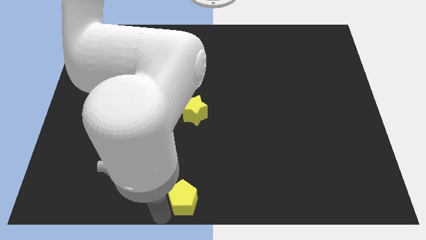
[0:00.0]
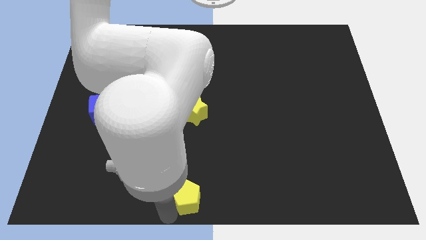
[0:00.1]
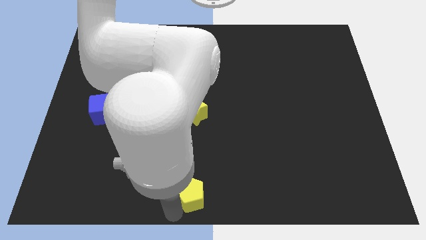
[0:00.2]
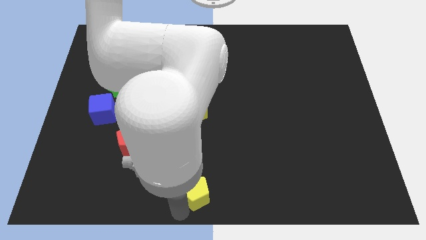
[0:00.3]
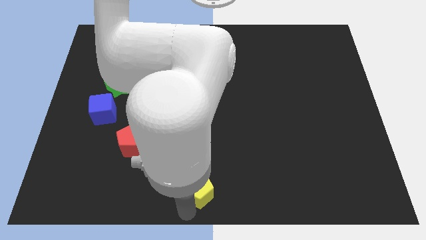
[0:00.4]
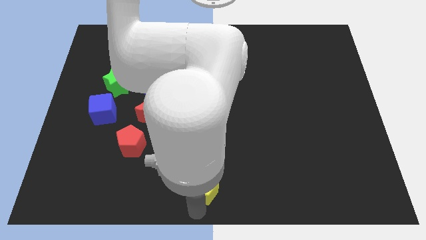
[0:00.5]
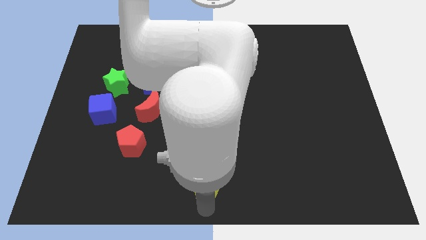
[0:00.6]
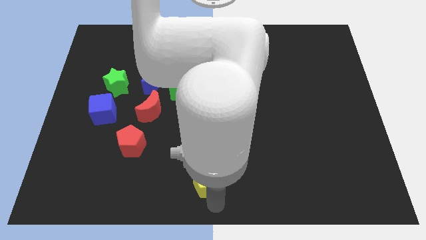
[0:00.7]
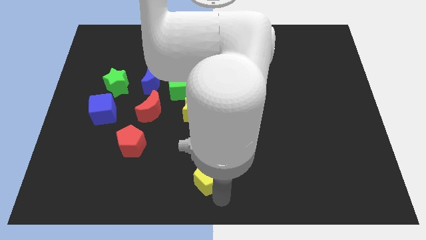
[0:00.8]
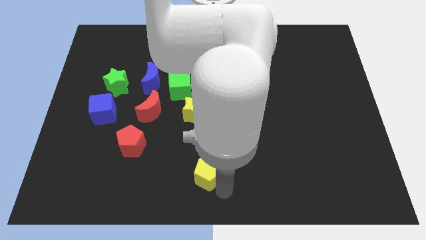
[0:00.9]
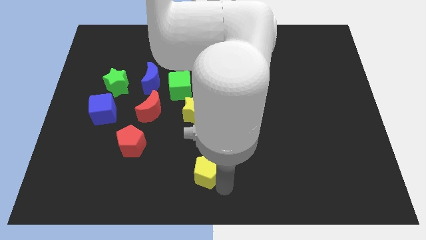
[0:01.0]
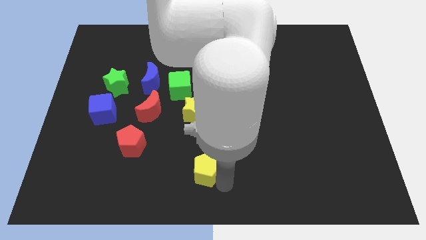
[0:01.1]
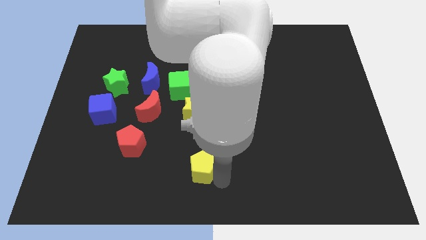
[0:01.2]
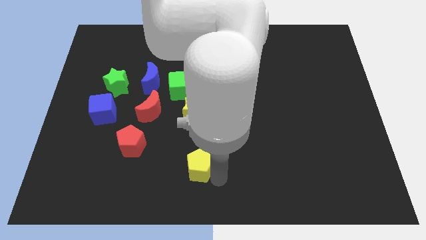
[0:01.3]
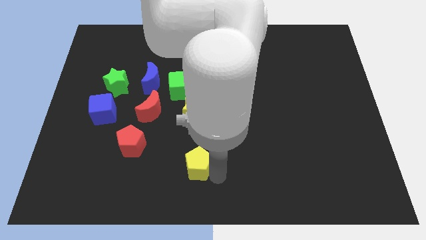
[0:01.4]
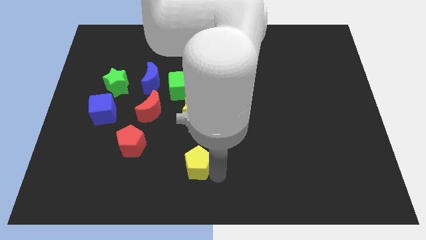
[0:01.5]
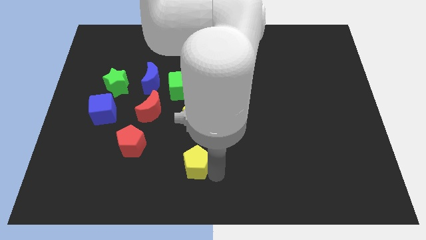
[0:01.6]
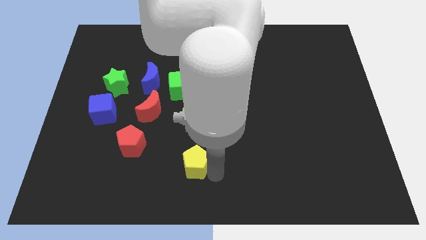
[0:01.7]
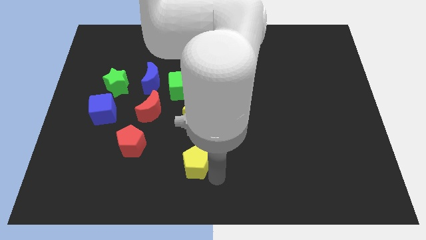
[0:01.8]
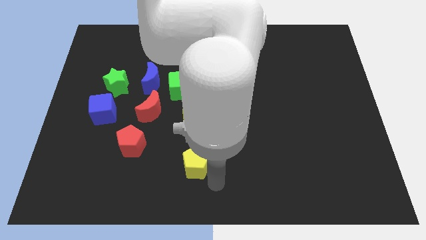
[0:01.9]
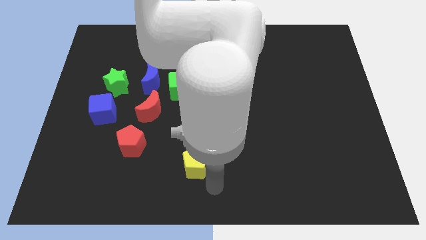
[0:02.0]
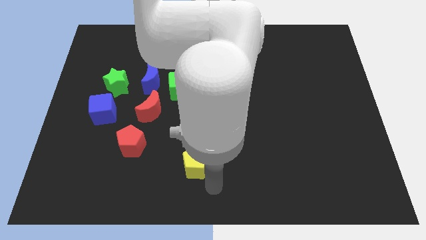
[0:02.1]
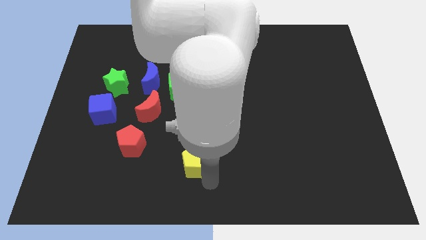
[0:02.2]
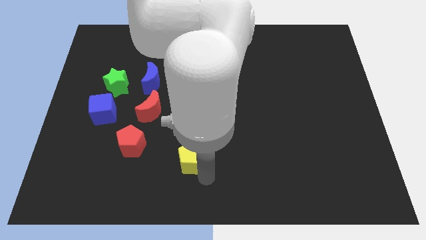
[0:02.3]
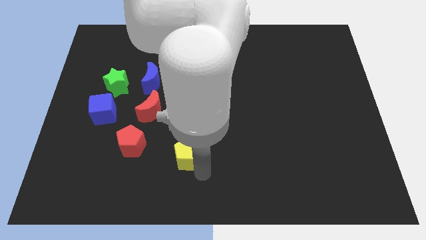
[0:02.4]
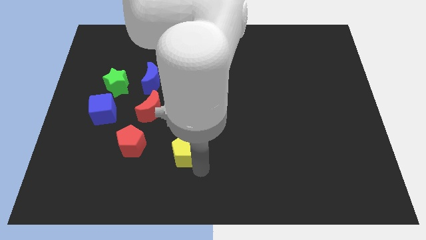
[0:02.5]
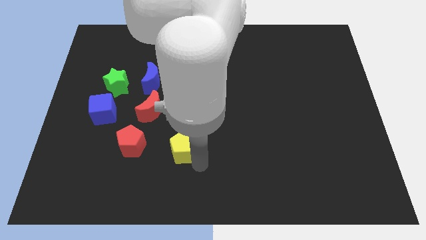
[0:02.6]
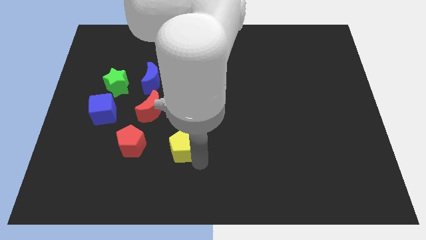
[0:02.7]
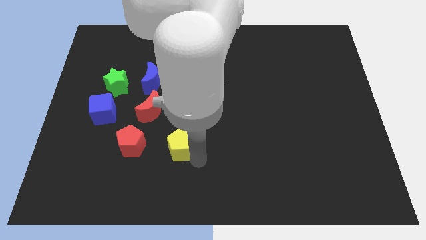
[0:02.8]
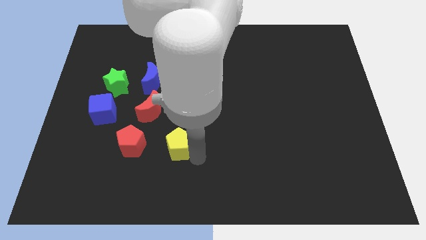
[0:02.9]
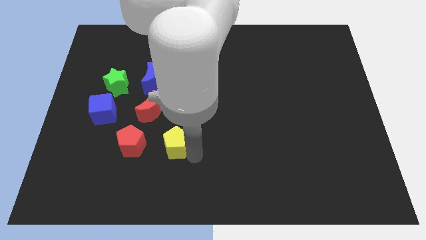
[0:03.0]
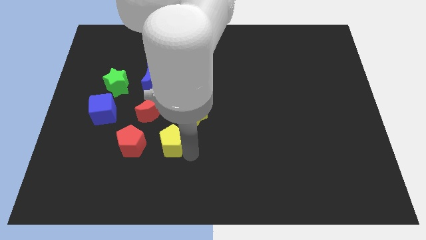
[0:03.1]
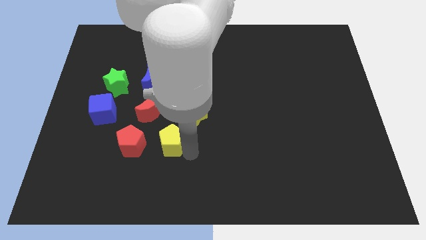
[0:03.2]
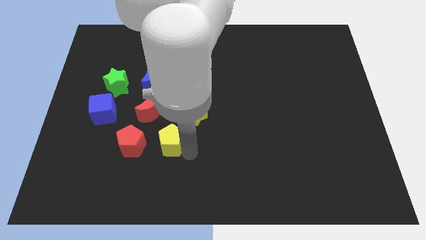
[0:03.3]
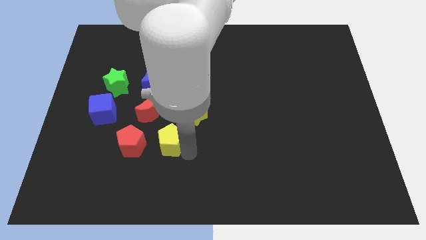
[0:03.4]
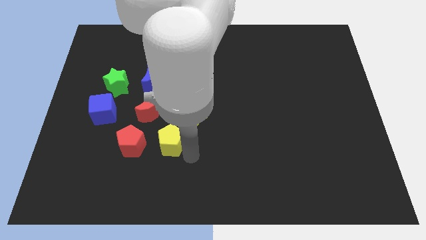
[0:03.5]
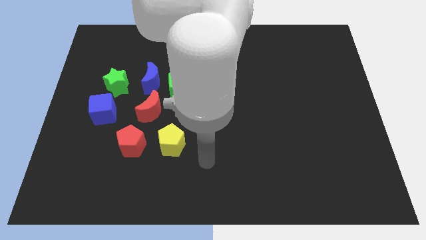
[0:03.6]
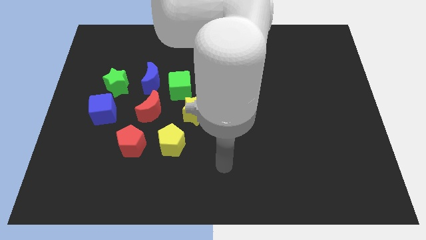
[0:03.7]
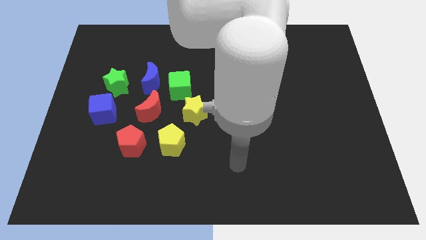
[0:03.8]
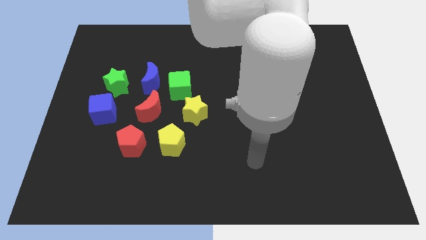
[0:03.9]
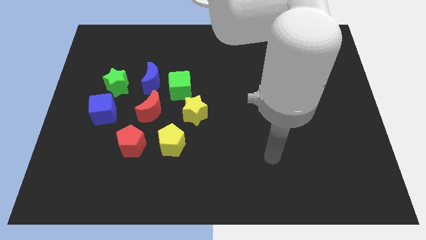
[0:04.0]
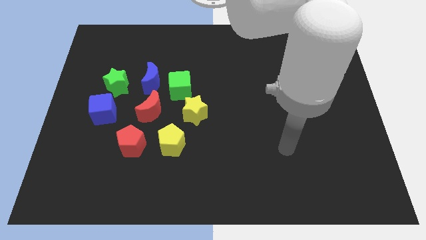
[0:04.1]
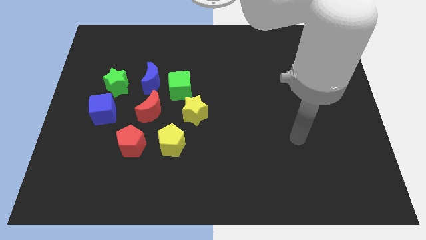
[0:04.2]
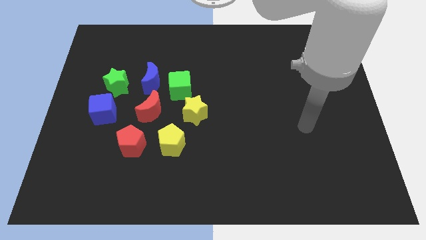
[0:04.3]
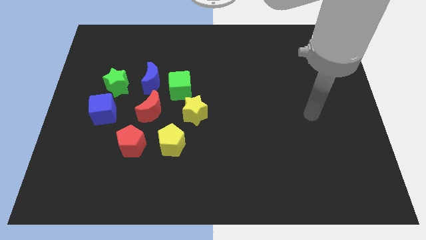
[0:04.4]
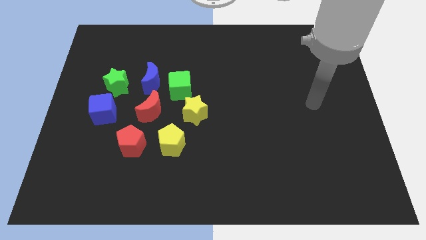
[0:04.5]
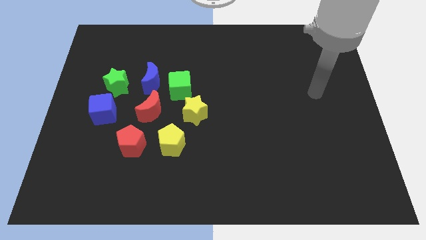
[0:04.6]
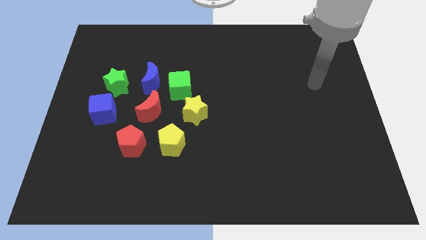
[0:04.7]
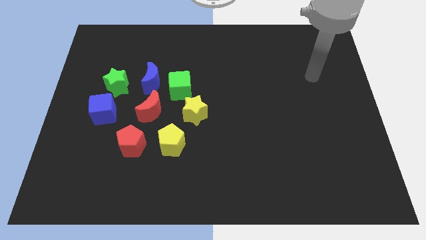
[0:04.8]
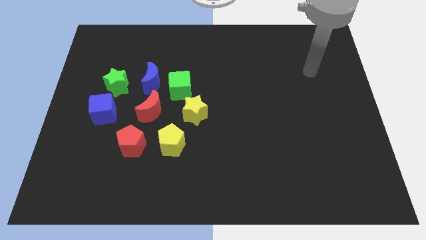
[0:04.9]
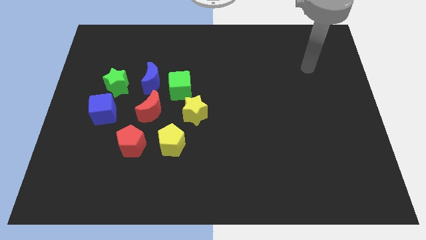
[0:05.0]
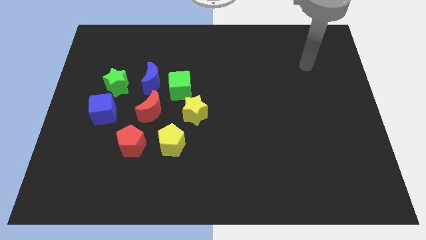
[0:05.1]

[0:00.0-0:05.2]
place the yellow pentagon to the right of the red pentagon

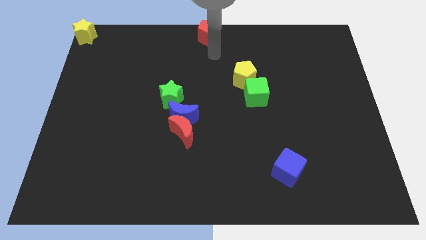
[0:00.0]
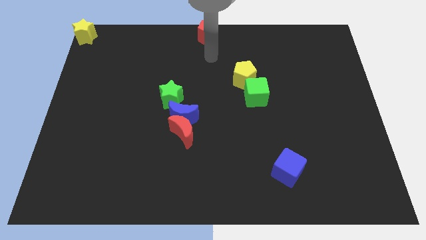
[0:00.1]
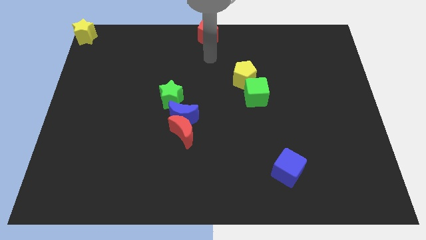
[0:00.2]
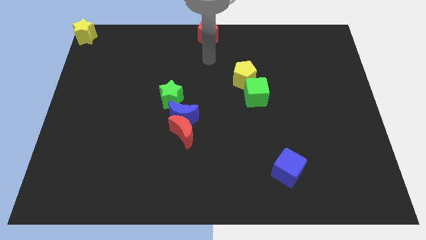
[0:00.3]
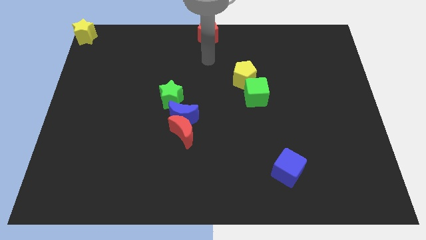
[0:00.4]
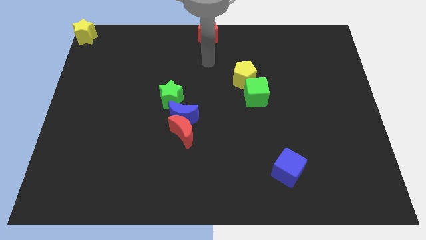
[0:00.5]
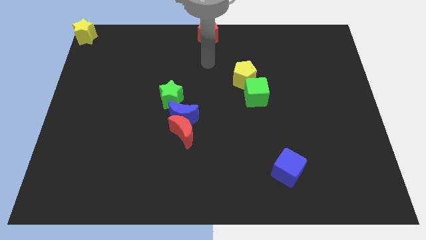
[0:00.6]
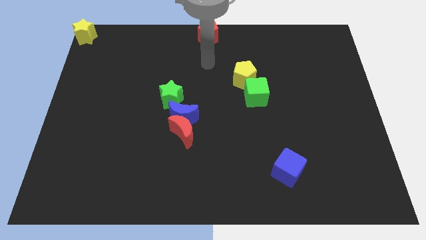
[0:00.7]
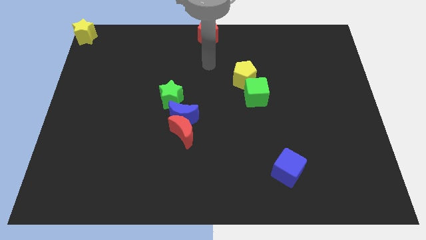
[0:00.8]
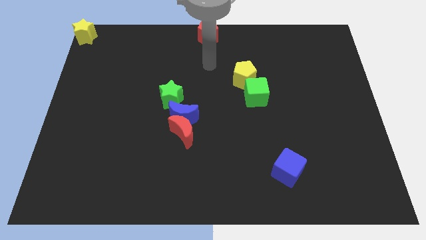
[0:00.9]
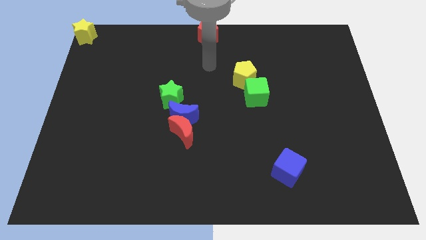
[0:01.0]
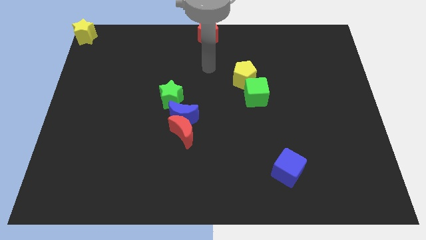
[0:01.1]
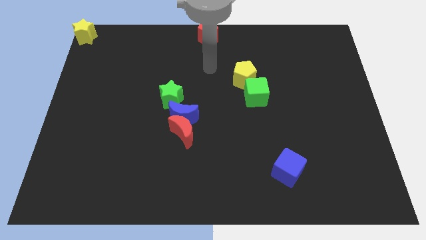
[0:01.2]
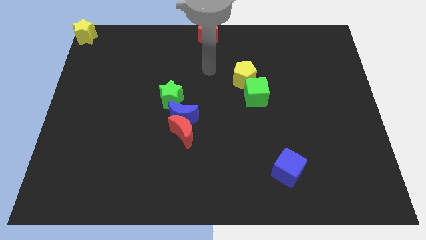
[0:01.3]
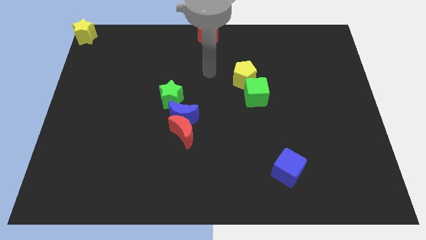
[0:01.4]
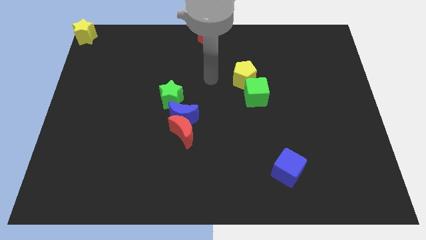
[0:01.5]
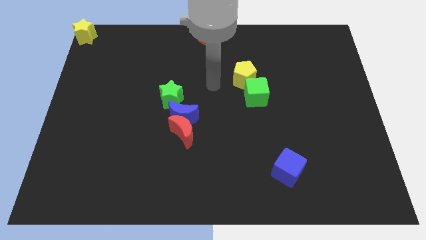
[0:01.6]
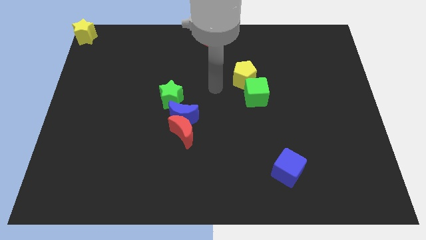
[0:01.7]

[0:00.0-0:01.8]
put your arm in between the yellow pentagon and green star

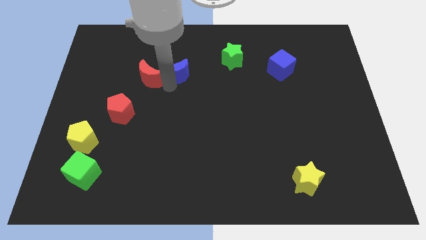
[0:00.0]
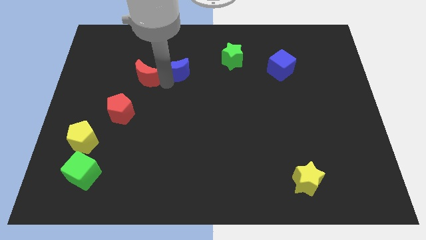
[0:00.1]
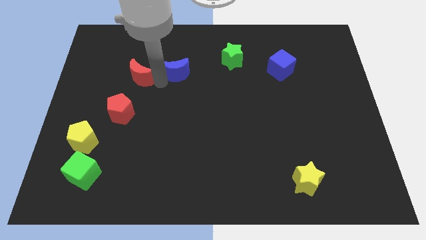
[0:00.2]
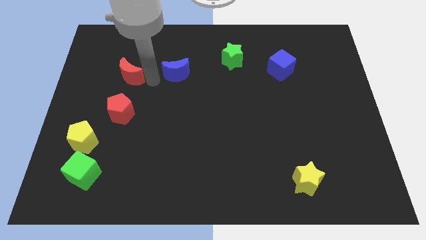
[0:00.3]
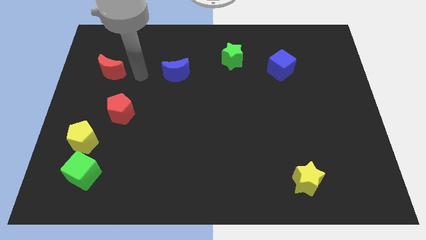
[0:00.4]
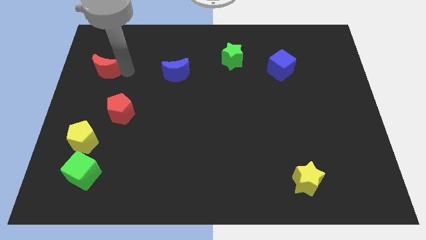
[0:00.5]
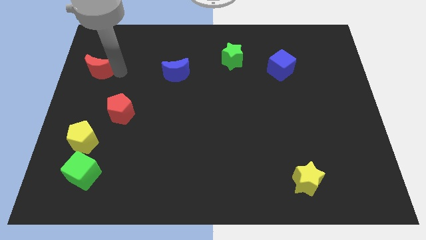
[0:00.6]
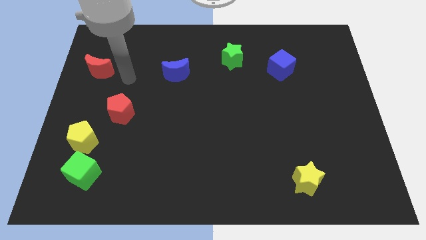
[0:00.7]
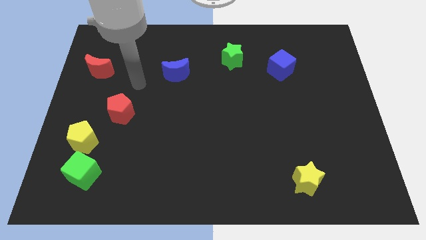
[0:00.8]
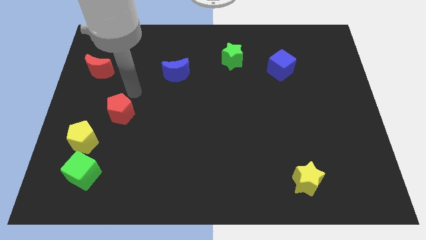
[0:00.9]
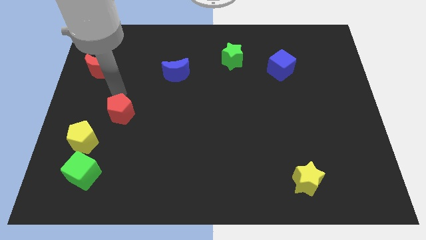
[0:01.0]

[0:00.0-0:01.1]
separate red moon from blue moon

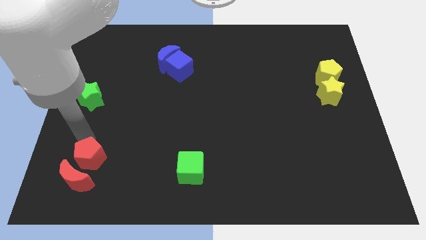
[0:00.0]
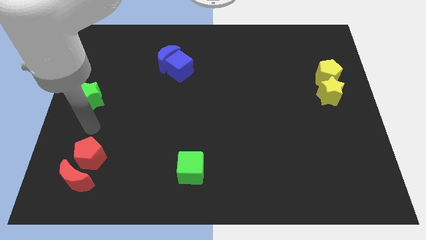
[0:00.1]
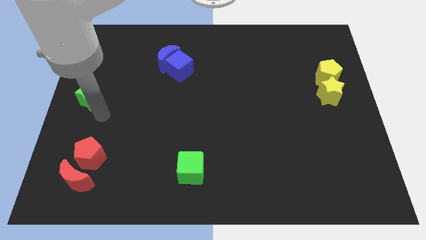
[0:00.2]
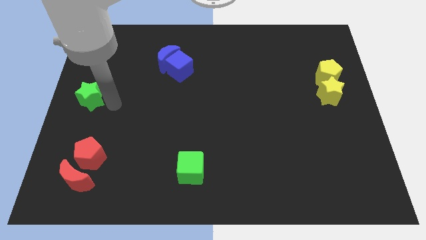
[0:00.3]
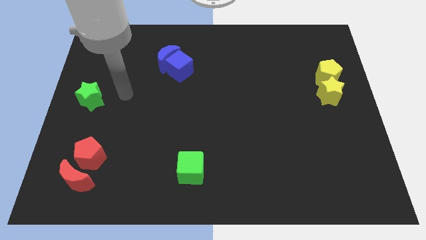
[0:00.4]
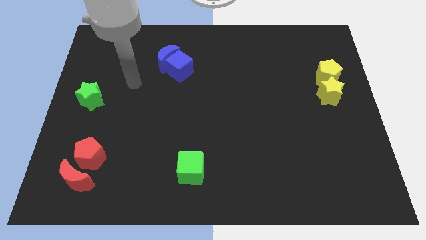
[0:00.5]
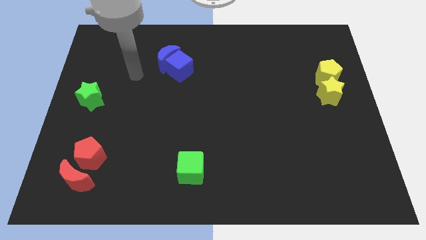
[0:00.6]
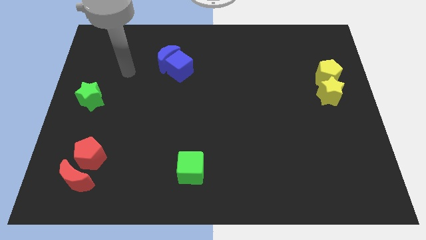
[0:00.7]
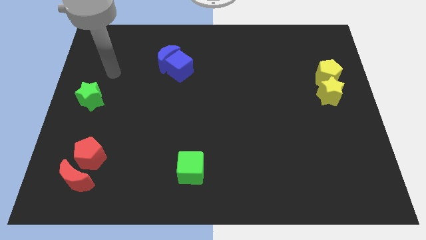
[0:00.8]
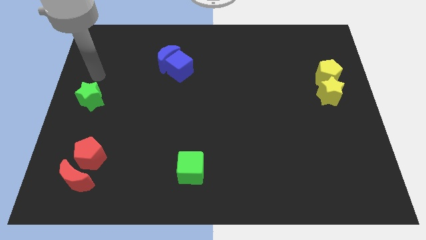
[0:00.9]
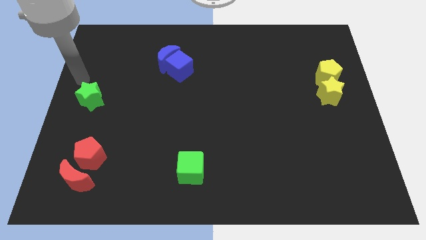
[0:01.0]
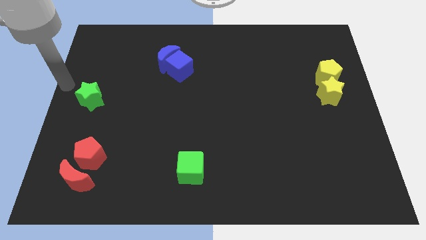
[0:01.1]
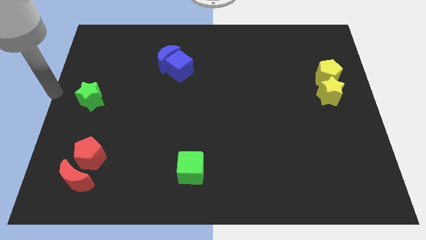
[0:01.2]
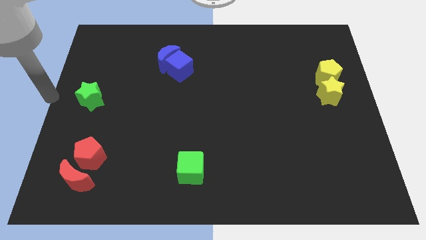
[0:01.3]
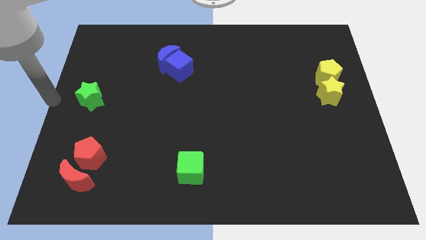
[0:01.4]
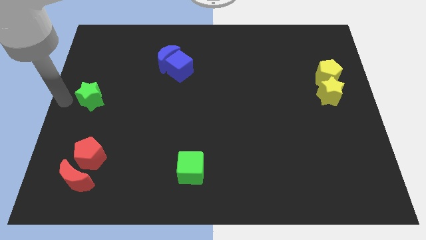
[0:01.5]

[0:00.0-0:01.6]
move your arm to the left of the green star
